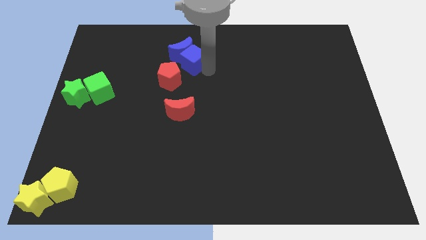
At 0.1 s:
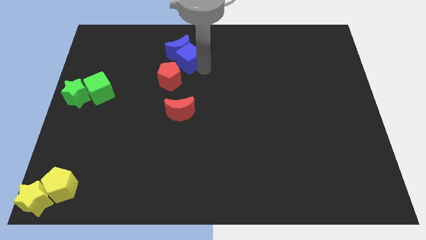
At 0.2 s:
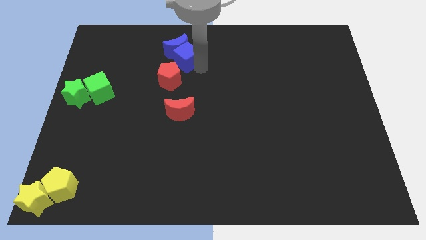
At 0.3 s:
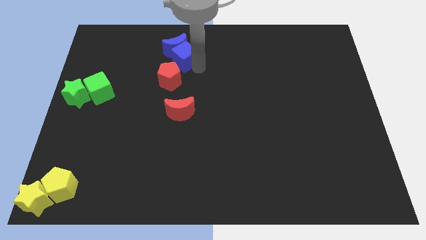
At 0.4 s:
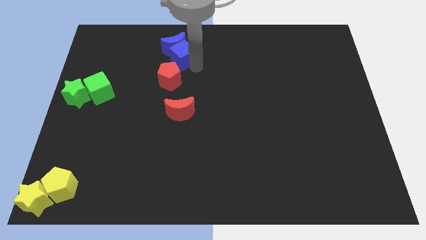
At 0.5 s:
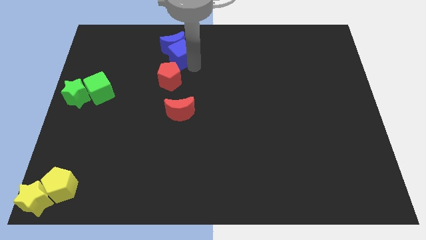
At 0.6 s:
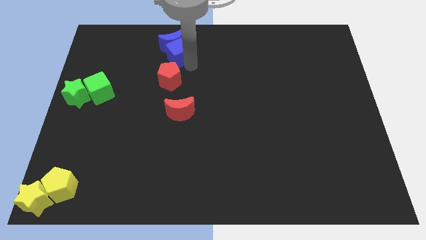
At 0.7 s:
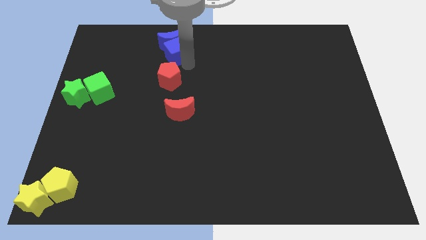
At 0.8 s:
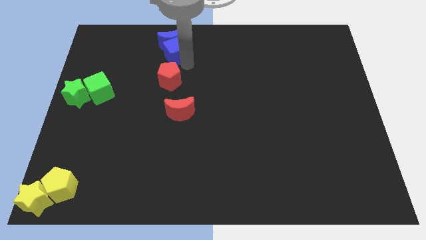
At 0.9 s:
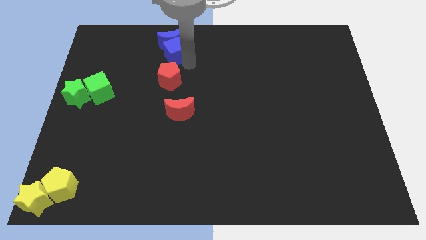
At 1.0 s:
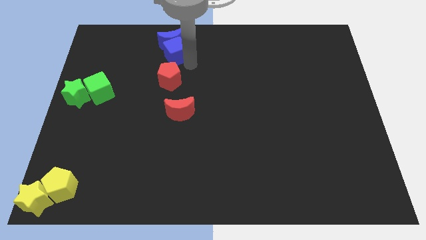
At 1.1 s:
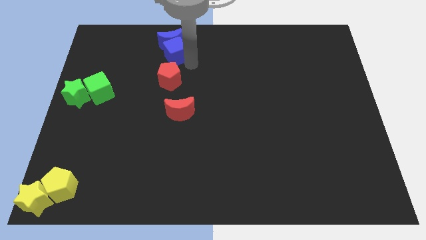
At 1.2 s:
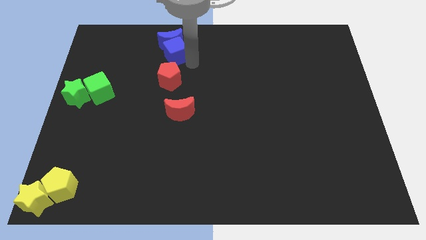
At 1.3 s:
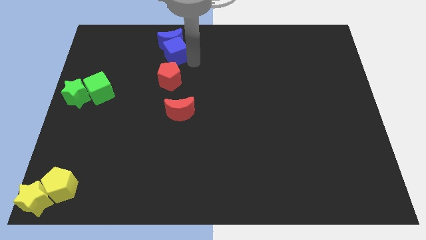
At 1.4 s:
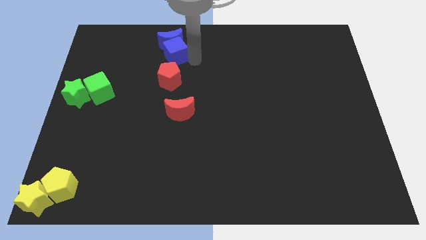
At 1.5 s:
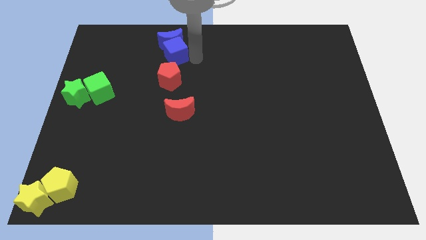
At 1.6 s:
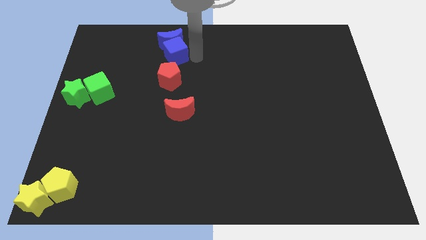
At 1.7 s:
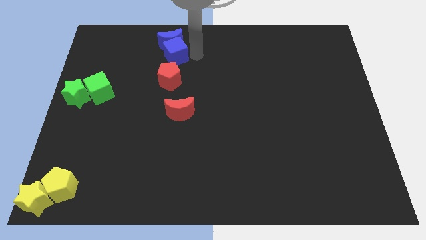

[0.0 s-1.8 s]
place the blue blocks at the top of red pentagon

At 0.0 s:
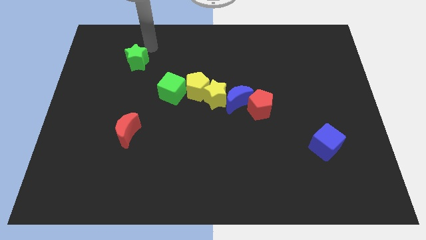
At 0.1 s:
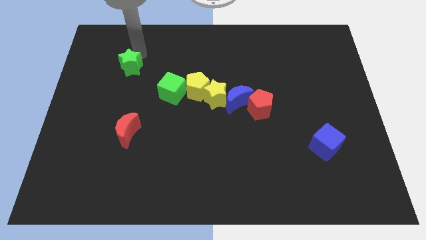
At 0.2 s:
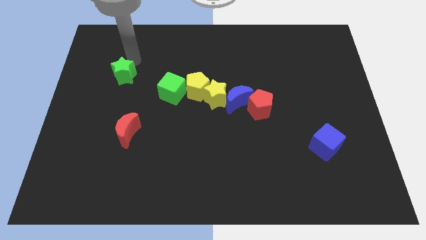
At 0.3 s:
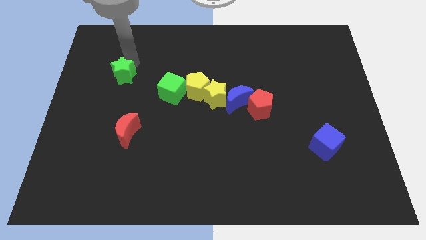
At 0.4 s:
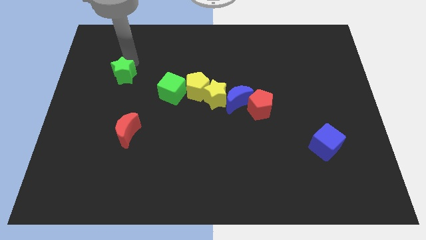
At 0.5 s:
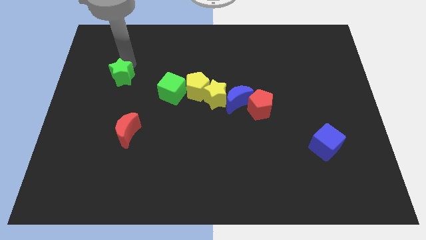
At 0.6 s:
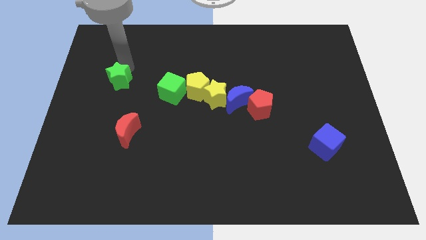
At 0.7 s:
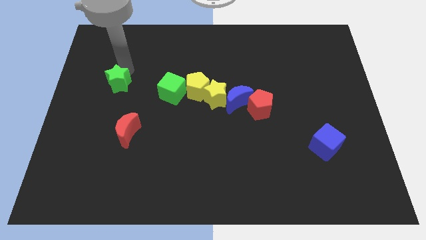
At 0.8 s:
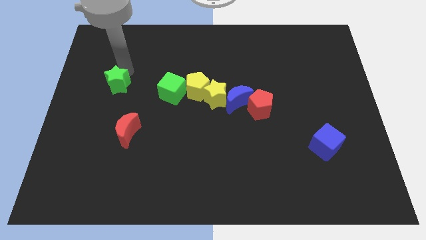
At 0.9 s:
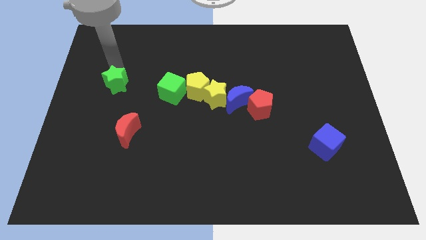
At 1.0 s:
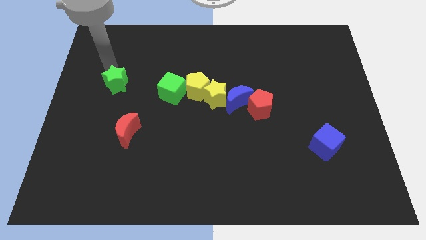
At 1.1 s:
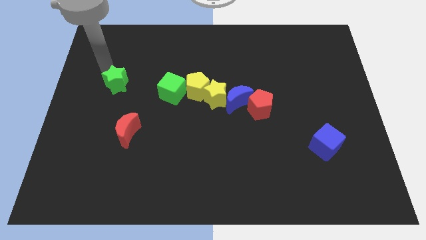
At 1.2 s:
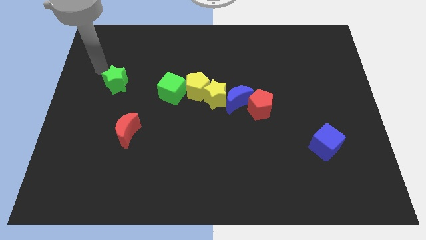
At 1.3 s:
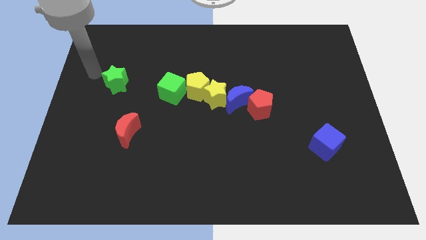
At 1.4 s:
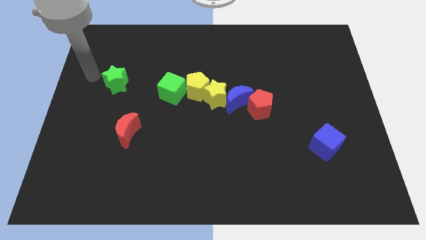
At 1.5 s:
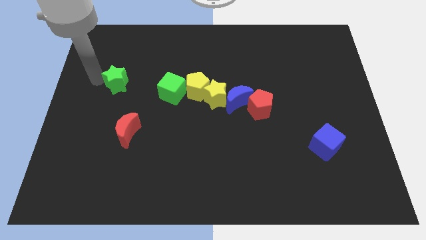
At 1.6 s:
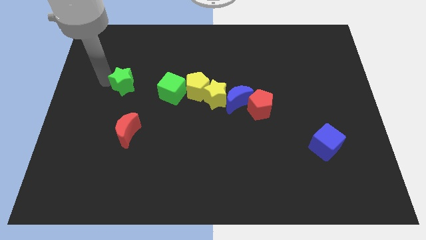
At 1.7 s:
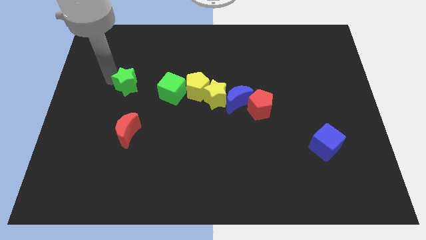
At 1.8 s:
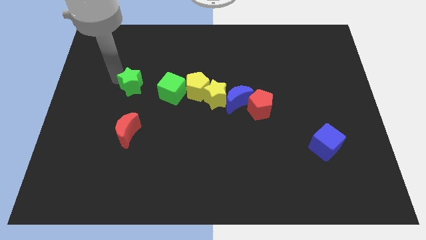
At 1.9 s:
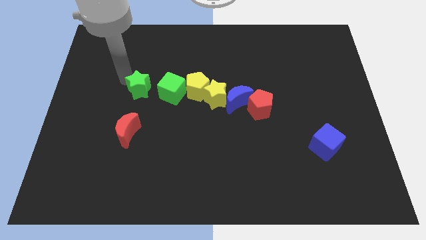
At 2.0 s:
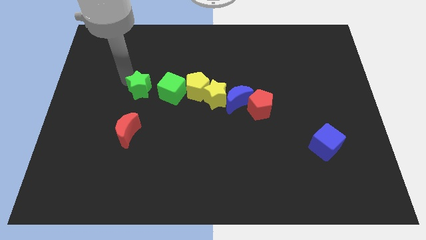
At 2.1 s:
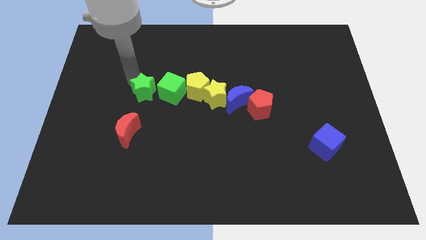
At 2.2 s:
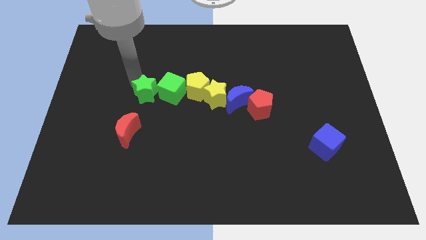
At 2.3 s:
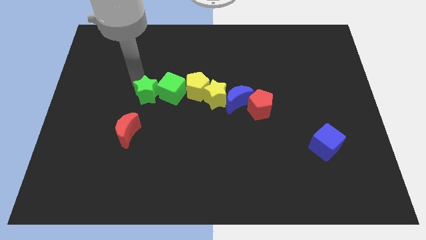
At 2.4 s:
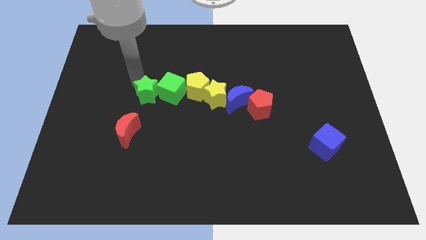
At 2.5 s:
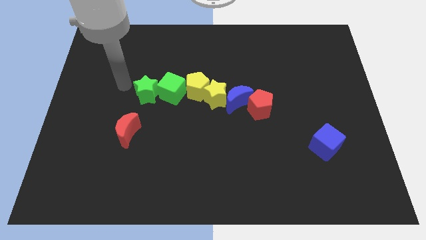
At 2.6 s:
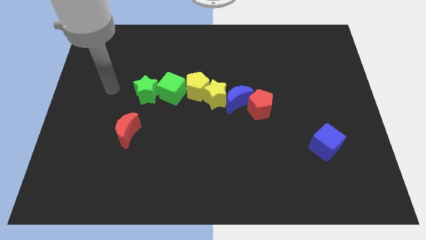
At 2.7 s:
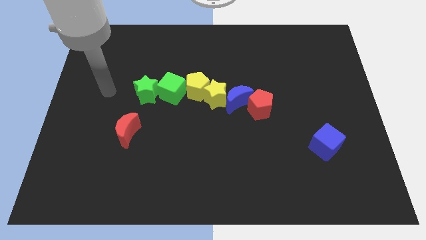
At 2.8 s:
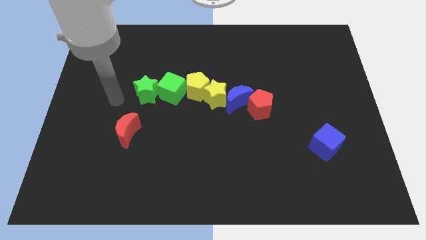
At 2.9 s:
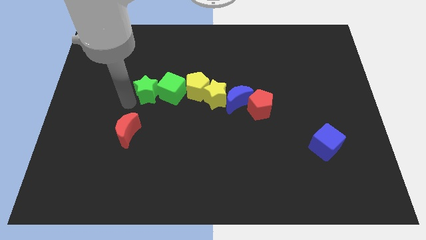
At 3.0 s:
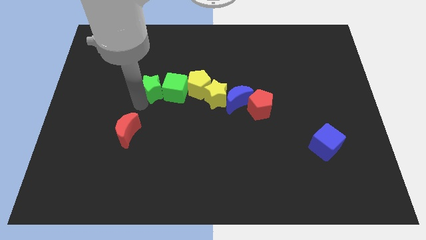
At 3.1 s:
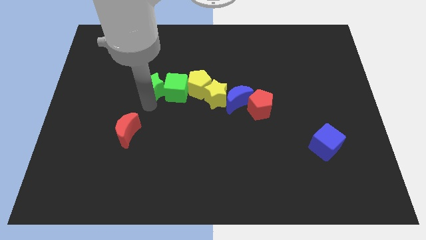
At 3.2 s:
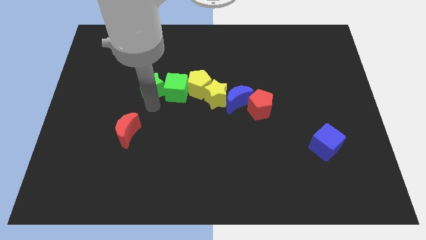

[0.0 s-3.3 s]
move the green star into the left side of the green cube

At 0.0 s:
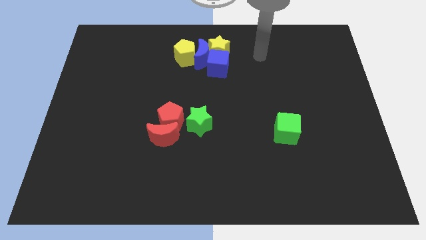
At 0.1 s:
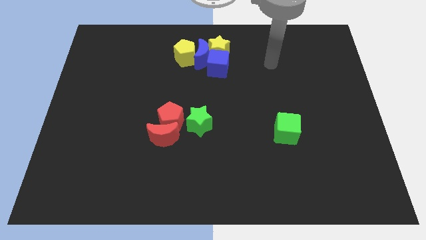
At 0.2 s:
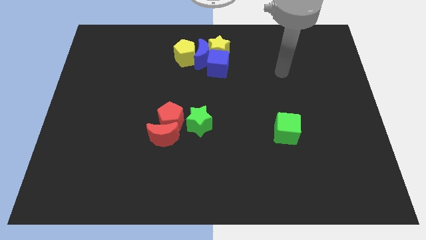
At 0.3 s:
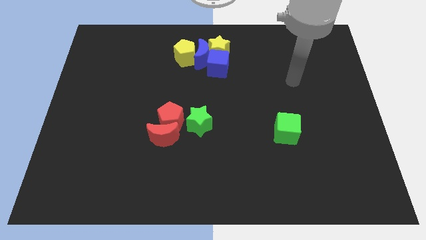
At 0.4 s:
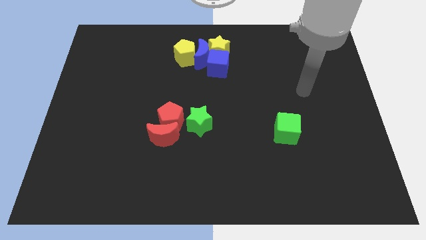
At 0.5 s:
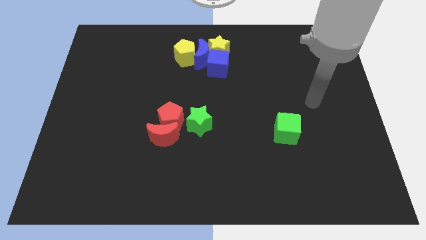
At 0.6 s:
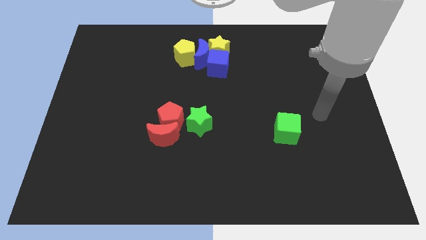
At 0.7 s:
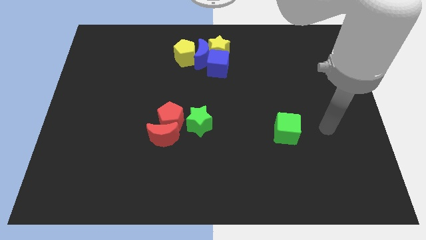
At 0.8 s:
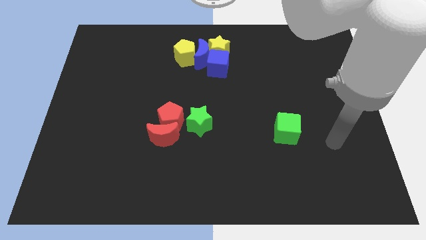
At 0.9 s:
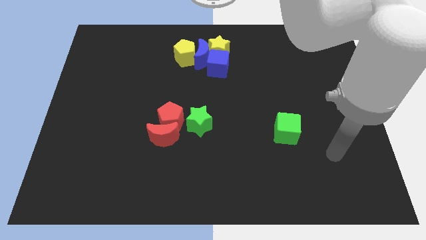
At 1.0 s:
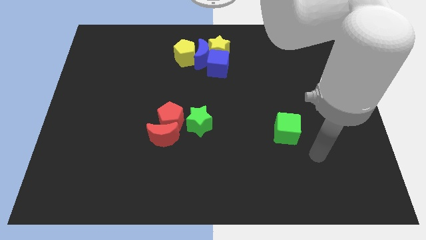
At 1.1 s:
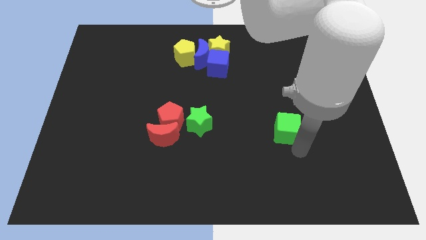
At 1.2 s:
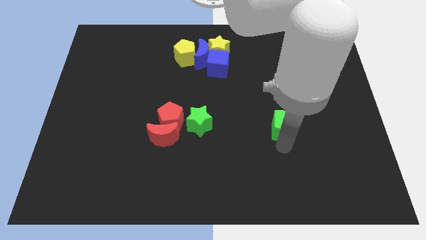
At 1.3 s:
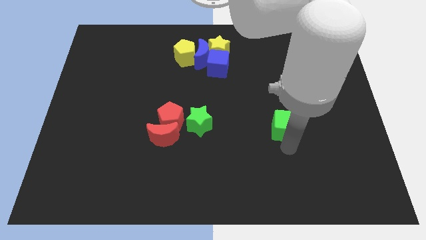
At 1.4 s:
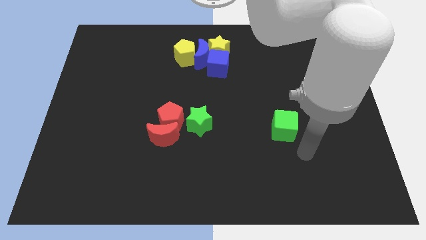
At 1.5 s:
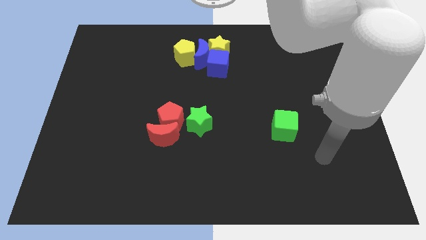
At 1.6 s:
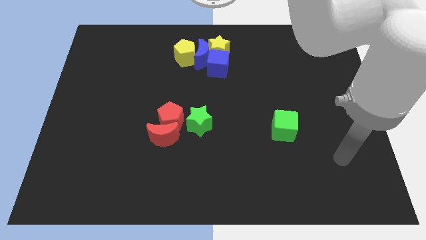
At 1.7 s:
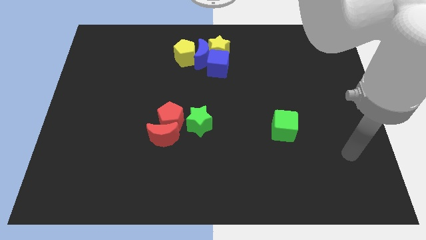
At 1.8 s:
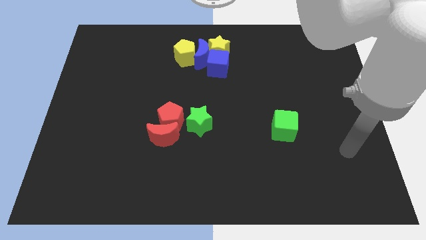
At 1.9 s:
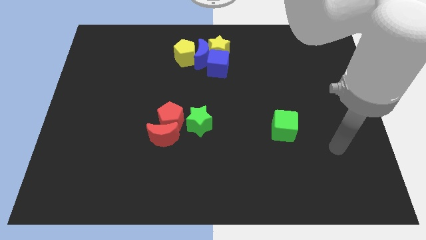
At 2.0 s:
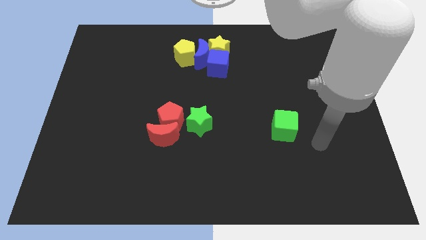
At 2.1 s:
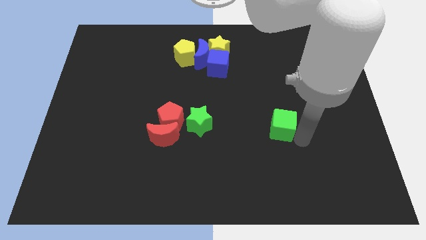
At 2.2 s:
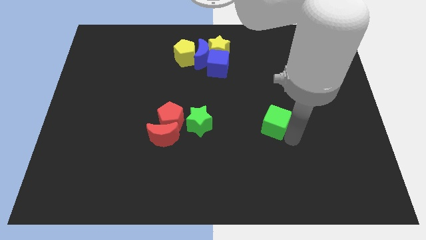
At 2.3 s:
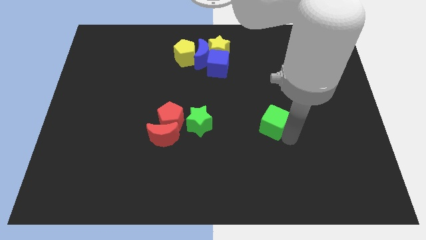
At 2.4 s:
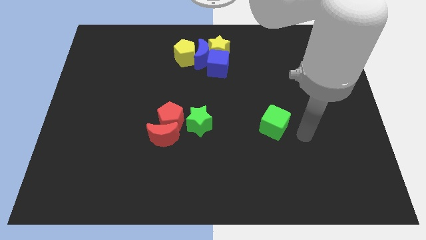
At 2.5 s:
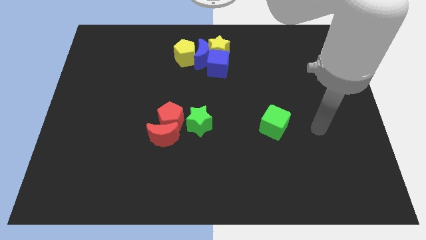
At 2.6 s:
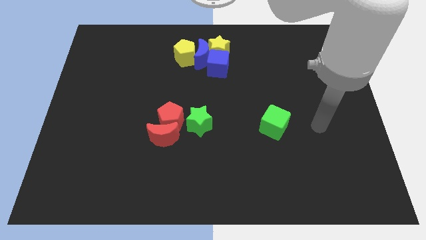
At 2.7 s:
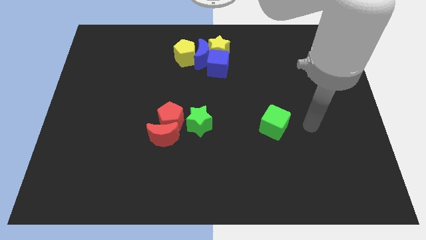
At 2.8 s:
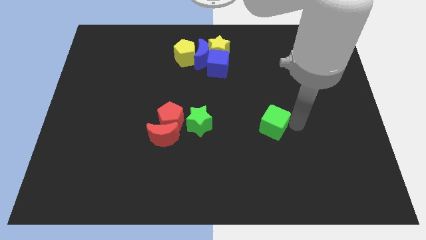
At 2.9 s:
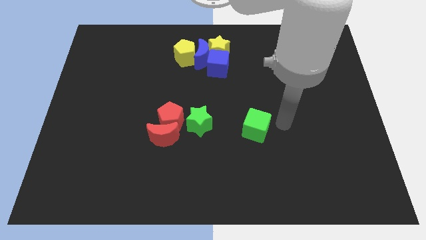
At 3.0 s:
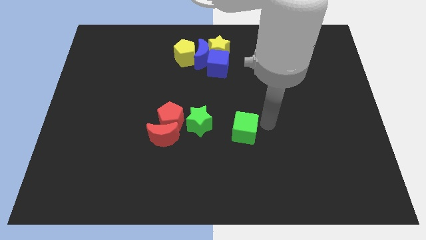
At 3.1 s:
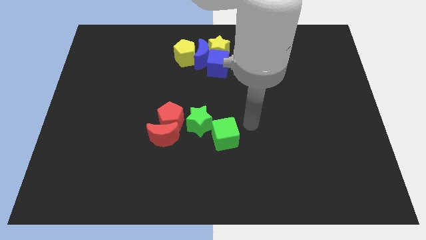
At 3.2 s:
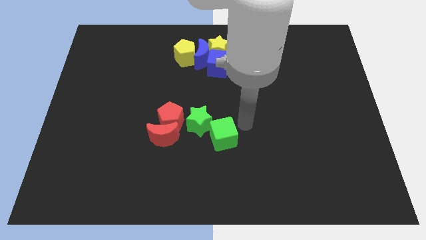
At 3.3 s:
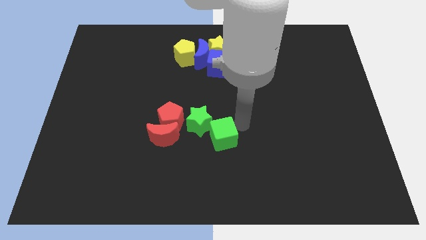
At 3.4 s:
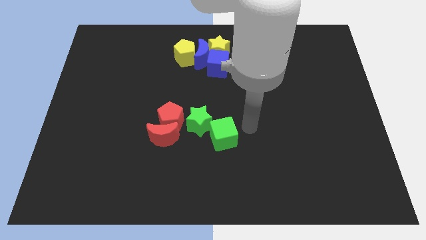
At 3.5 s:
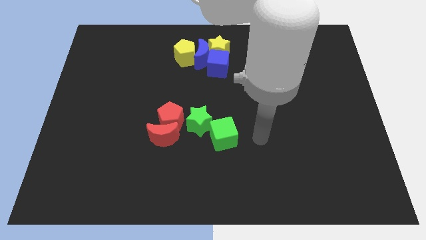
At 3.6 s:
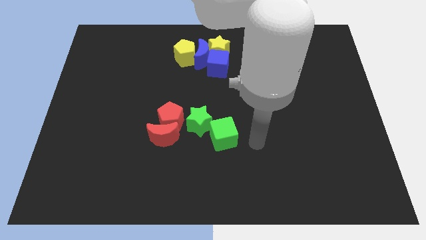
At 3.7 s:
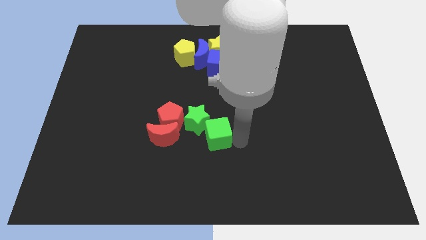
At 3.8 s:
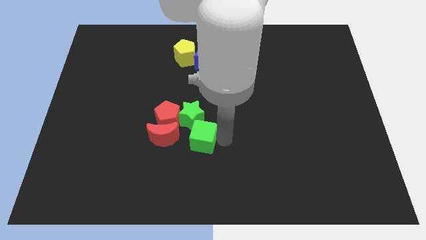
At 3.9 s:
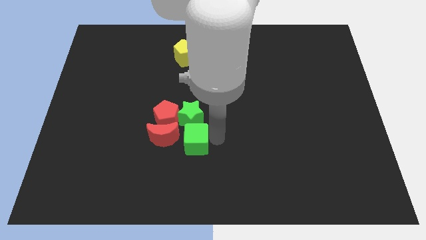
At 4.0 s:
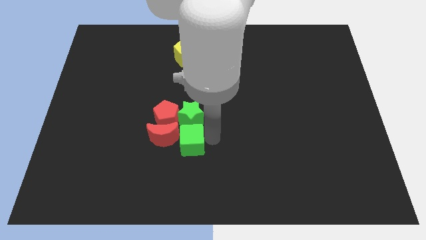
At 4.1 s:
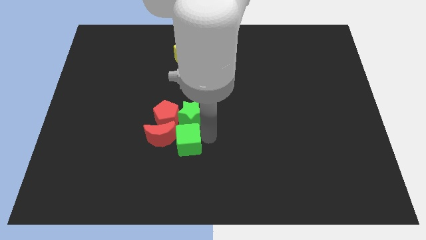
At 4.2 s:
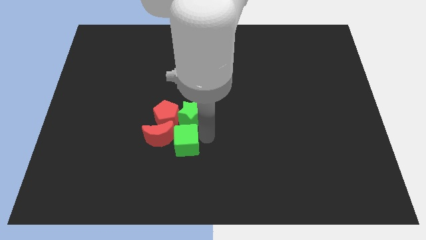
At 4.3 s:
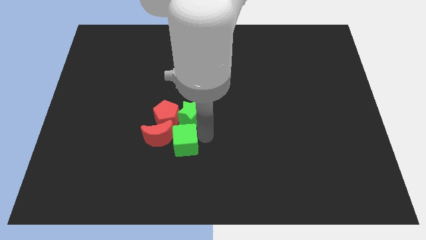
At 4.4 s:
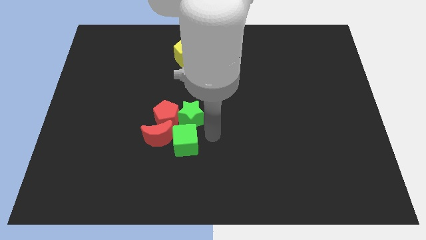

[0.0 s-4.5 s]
push the green cube into the red crescent
